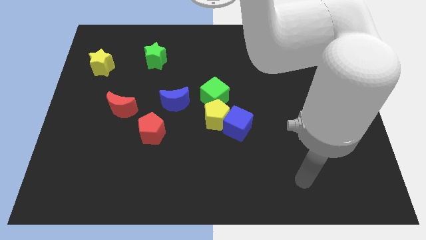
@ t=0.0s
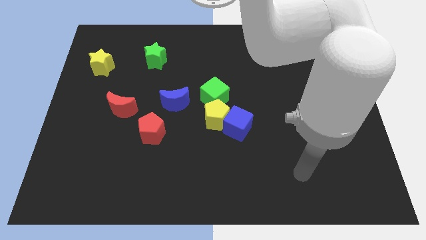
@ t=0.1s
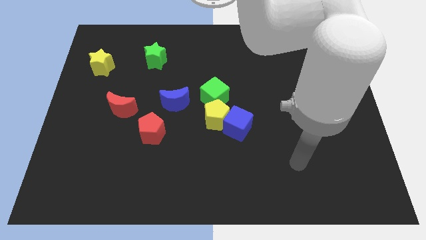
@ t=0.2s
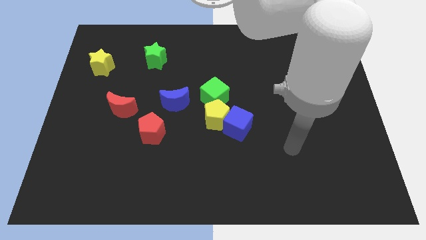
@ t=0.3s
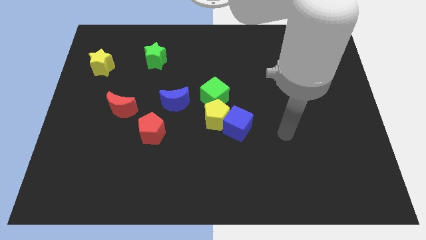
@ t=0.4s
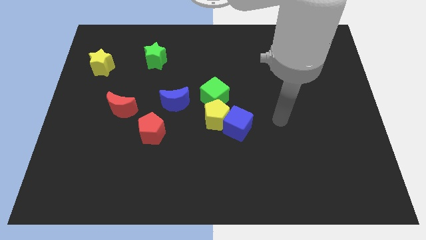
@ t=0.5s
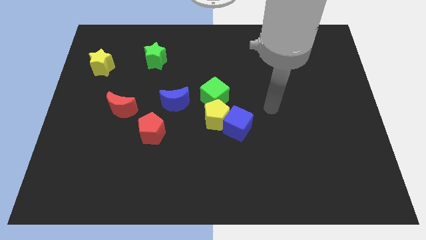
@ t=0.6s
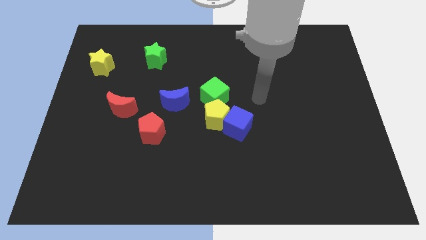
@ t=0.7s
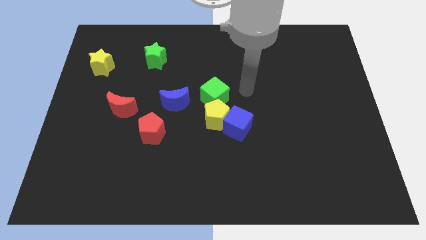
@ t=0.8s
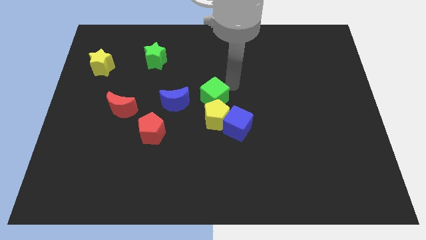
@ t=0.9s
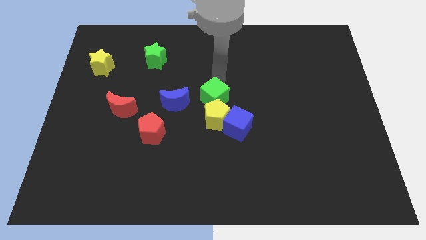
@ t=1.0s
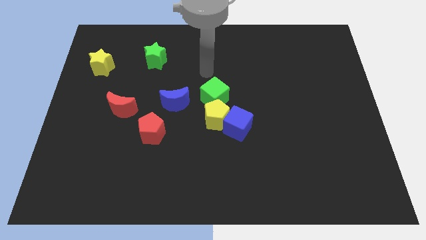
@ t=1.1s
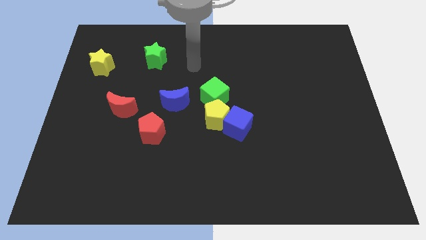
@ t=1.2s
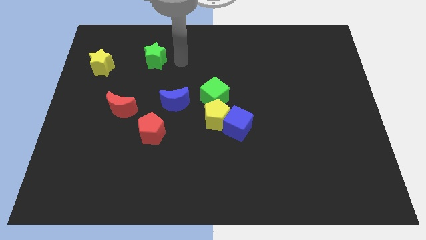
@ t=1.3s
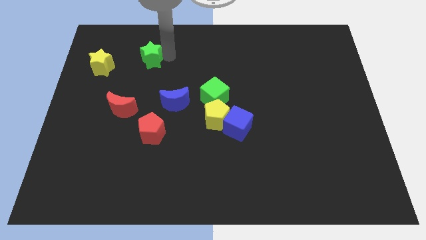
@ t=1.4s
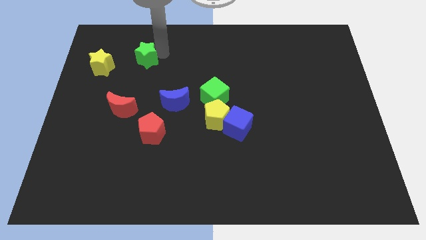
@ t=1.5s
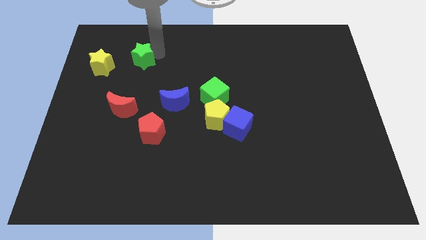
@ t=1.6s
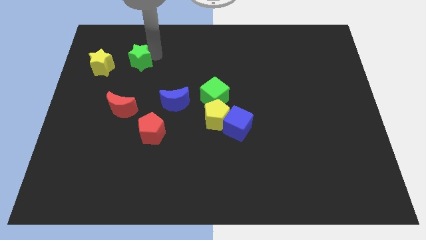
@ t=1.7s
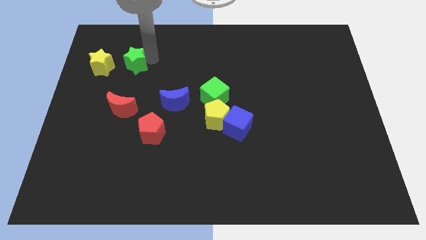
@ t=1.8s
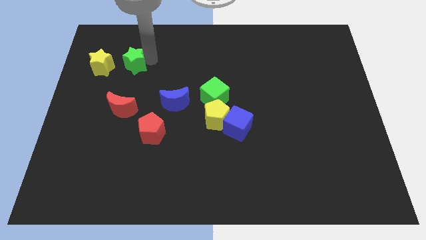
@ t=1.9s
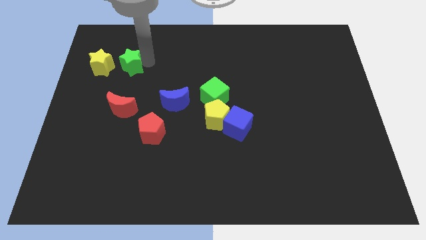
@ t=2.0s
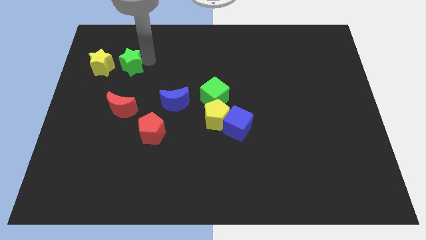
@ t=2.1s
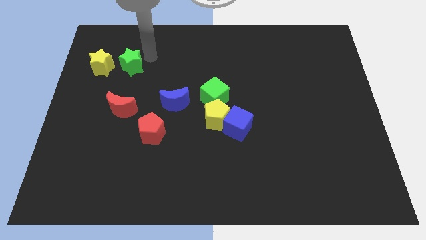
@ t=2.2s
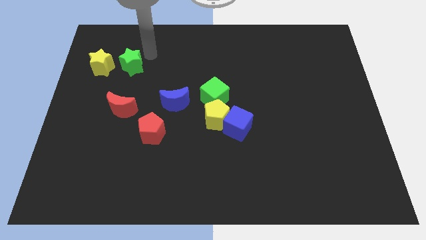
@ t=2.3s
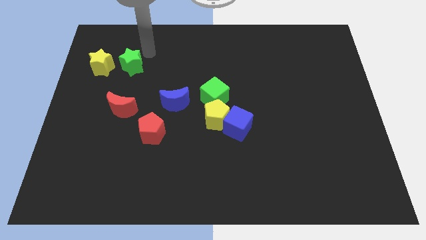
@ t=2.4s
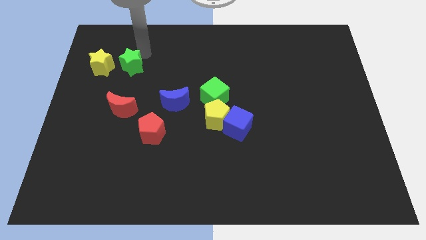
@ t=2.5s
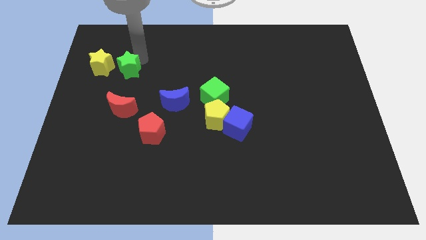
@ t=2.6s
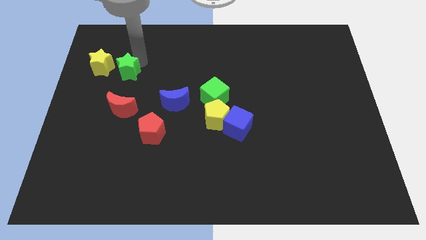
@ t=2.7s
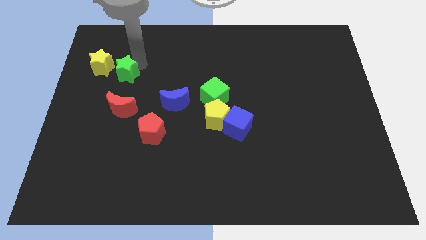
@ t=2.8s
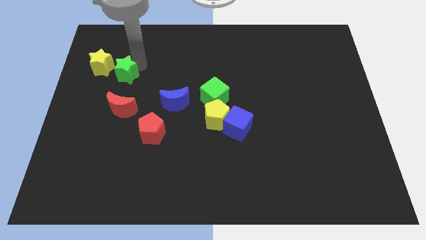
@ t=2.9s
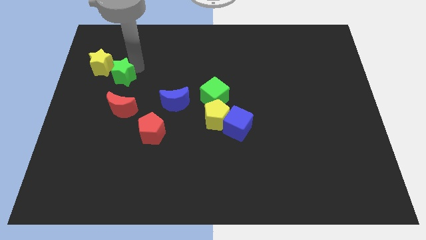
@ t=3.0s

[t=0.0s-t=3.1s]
slide green star into yellow star

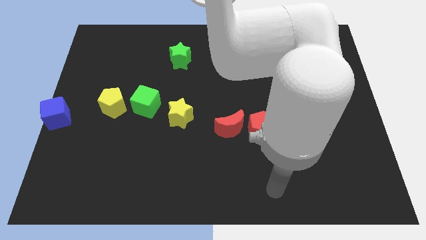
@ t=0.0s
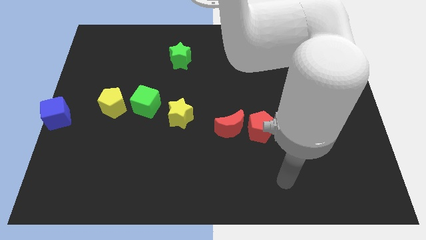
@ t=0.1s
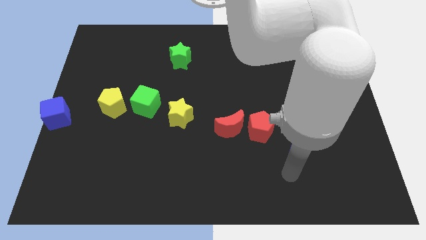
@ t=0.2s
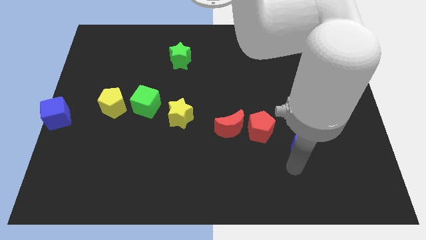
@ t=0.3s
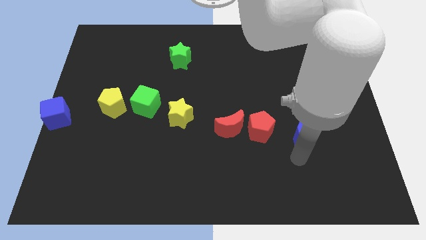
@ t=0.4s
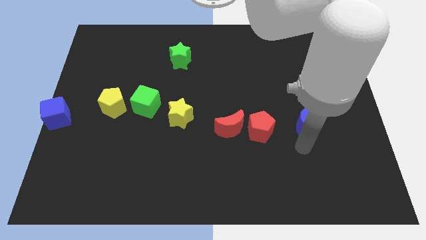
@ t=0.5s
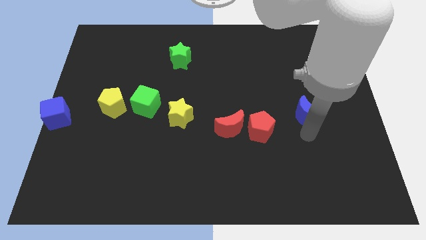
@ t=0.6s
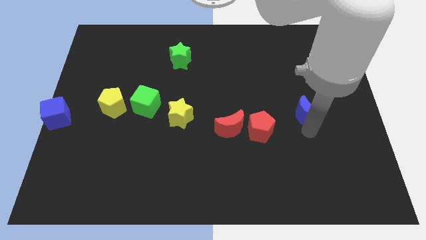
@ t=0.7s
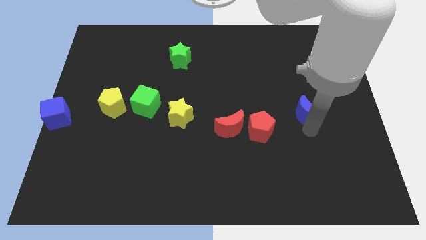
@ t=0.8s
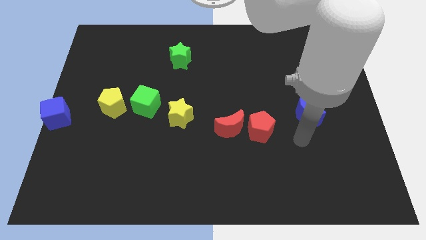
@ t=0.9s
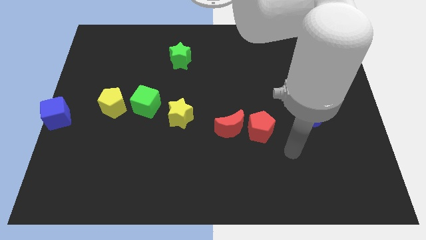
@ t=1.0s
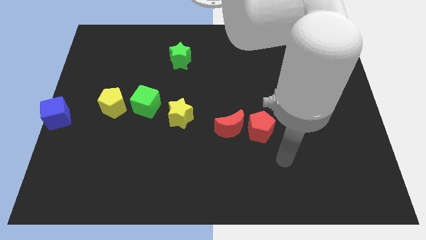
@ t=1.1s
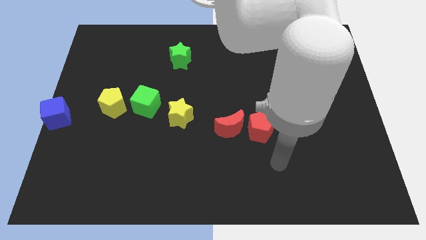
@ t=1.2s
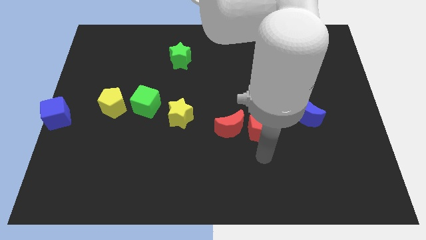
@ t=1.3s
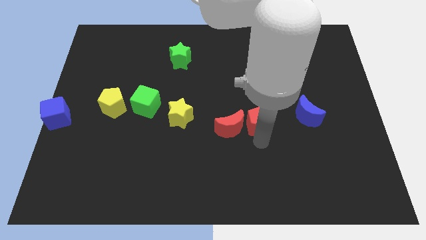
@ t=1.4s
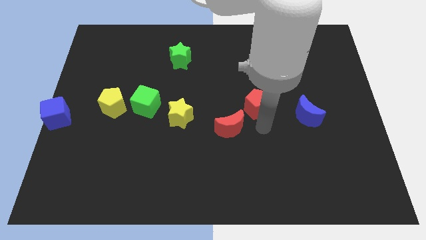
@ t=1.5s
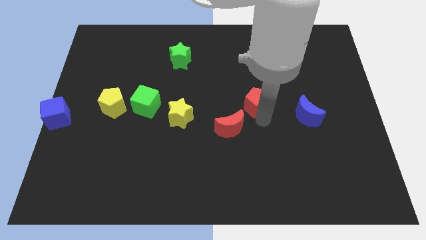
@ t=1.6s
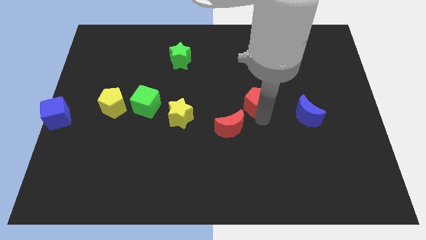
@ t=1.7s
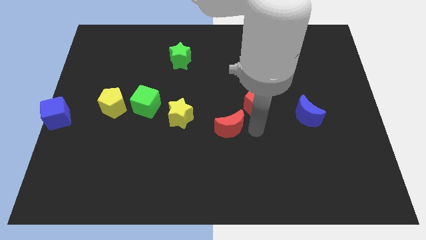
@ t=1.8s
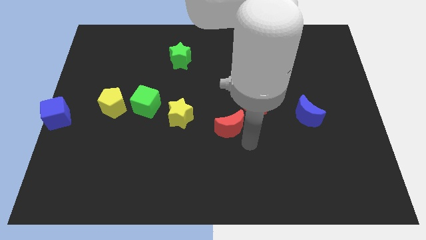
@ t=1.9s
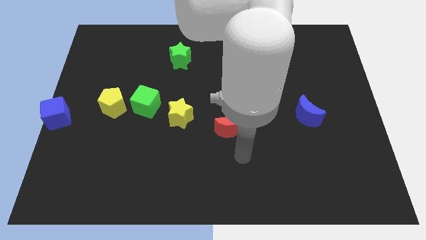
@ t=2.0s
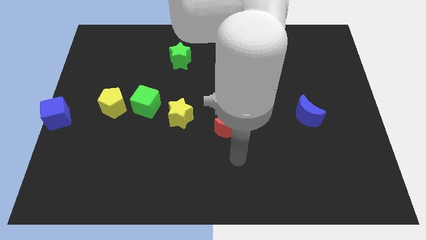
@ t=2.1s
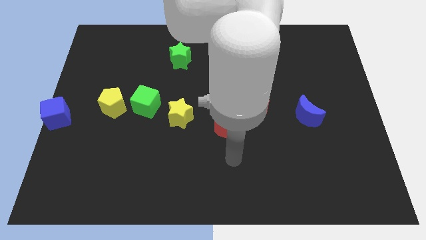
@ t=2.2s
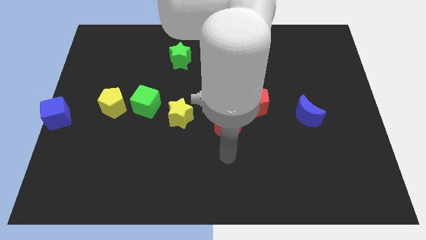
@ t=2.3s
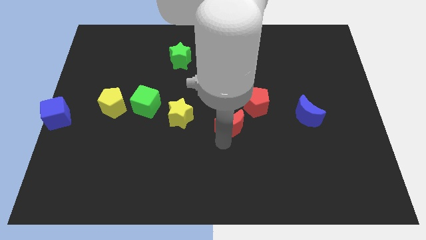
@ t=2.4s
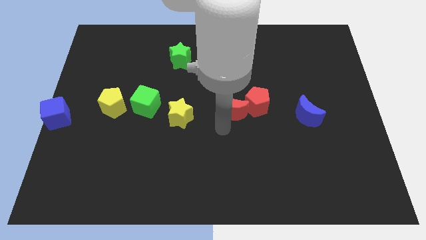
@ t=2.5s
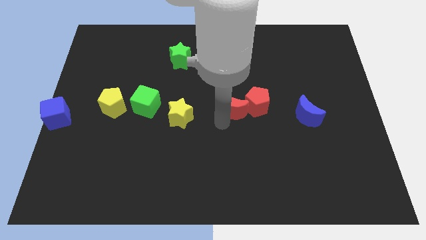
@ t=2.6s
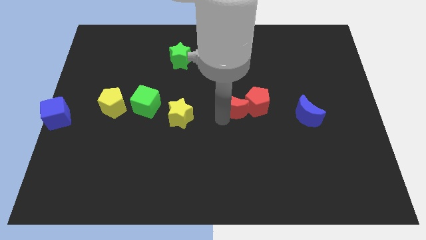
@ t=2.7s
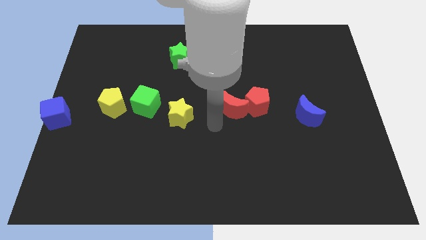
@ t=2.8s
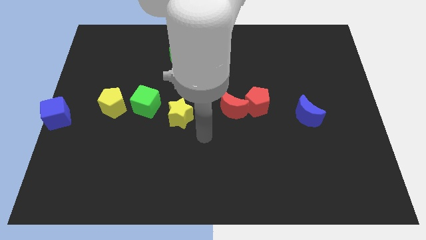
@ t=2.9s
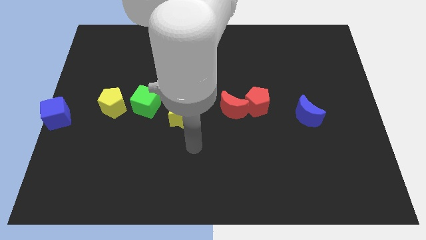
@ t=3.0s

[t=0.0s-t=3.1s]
put the two red blocks together

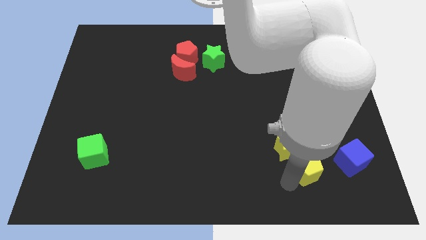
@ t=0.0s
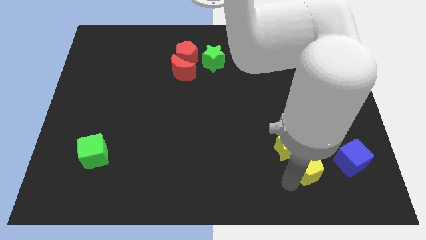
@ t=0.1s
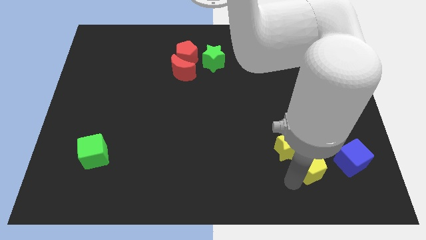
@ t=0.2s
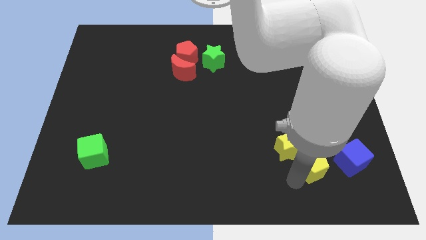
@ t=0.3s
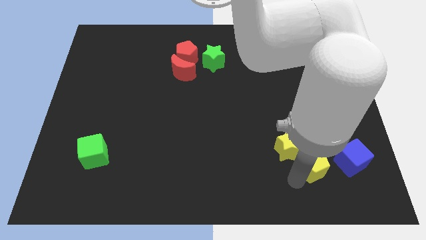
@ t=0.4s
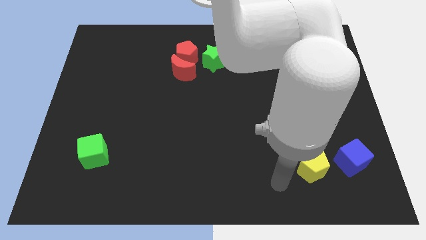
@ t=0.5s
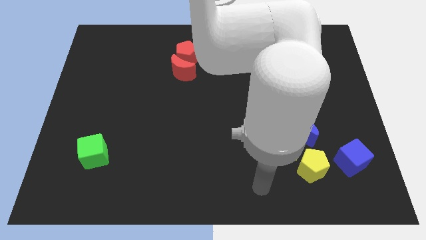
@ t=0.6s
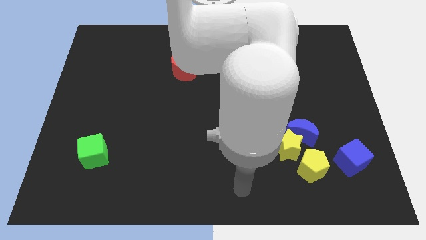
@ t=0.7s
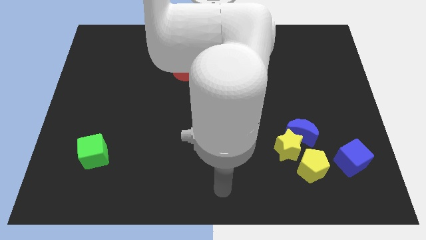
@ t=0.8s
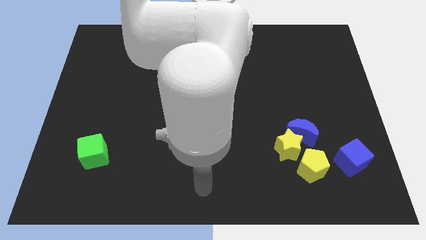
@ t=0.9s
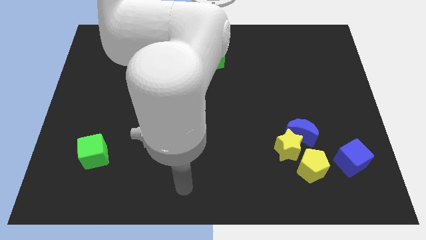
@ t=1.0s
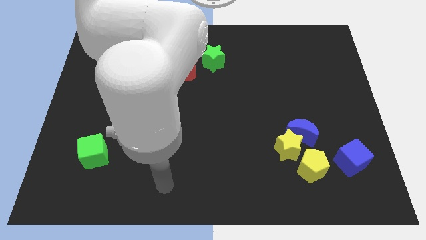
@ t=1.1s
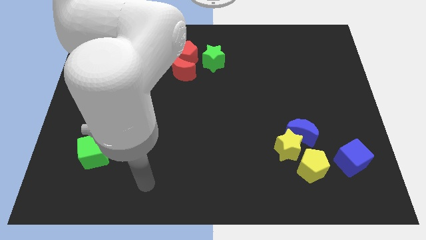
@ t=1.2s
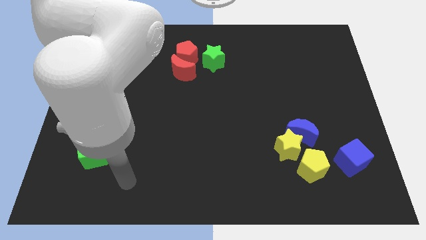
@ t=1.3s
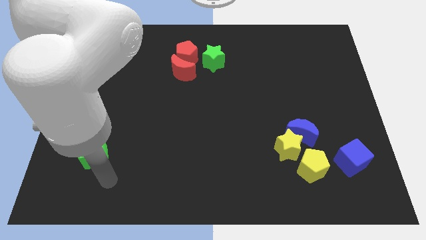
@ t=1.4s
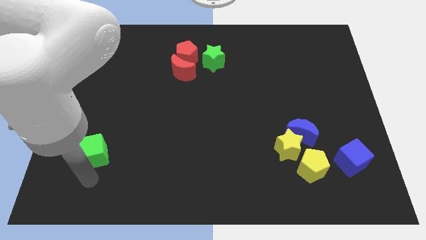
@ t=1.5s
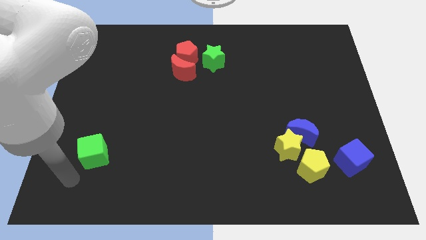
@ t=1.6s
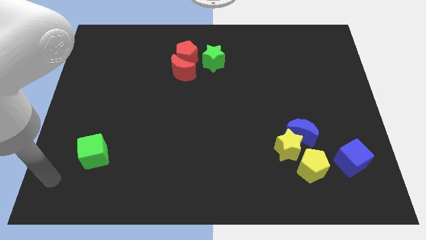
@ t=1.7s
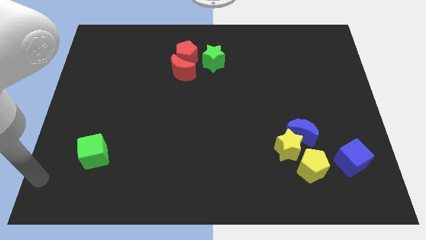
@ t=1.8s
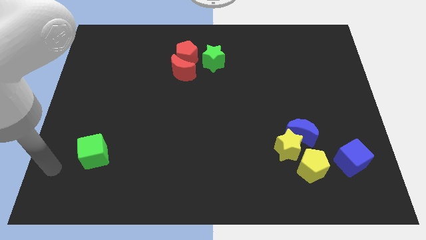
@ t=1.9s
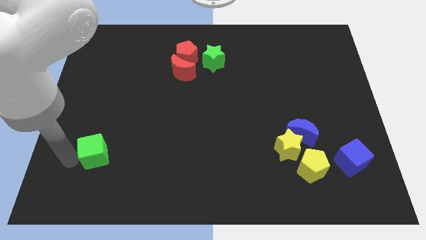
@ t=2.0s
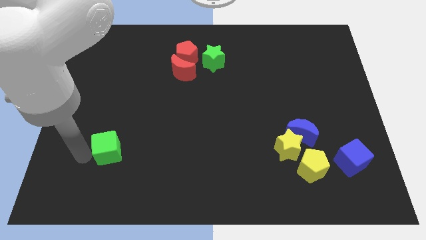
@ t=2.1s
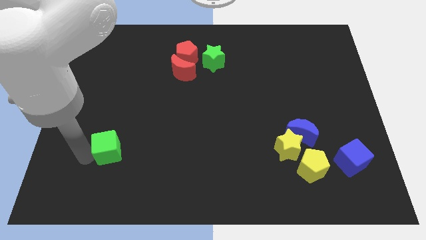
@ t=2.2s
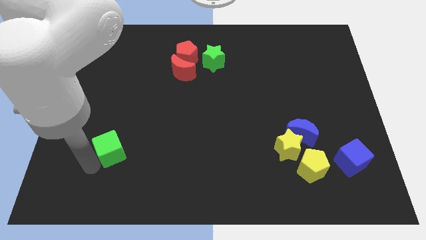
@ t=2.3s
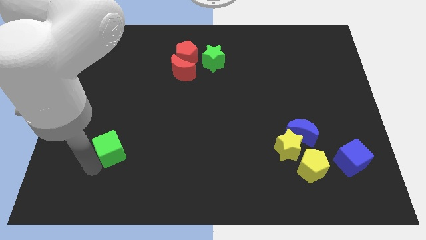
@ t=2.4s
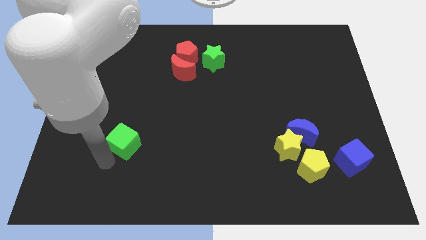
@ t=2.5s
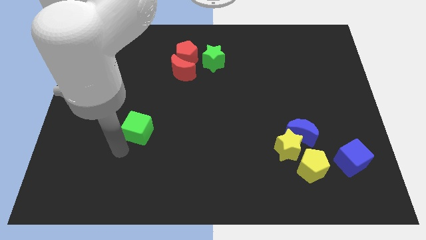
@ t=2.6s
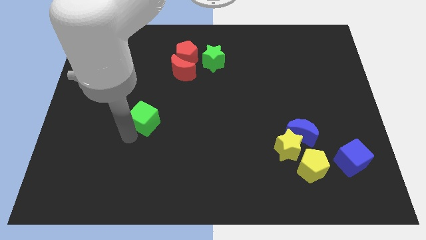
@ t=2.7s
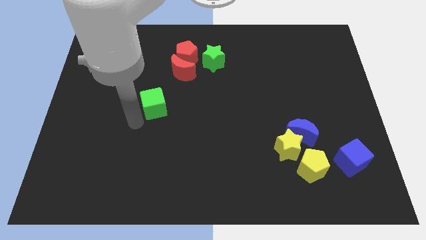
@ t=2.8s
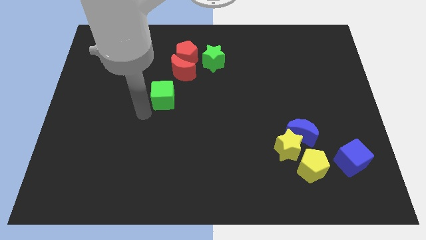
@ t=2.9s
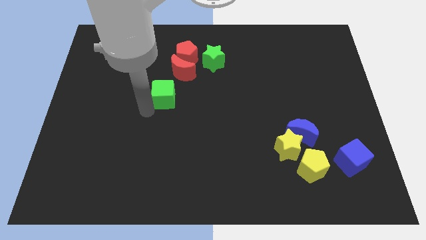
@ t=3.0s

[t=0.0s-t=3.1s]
place the green cubediagonally below the red moon
